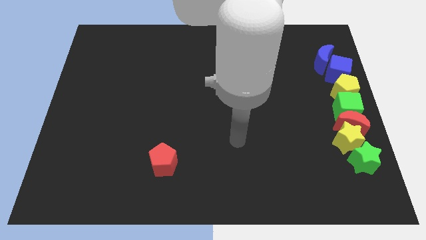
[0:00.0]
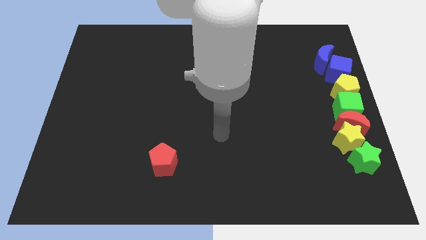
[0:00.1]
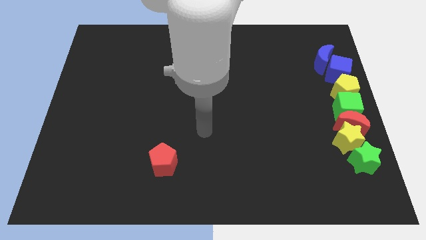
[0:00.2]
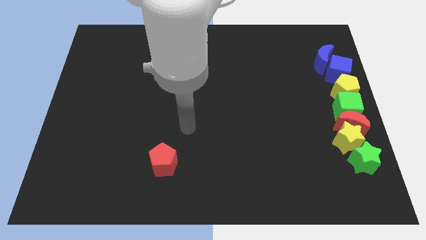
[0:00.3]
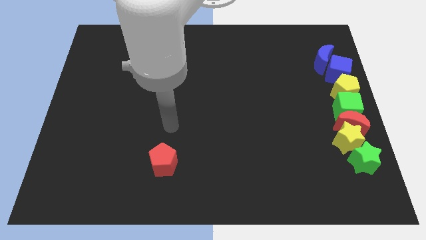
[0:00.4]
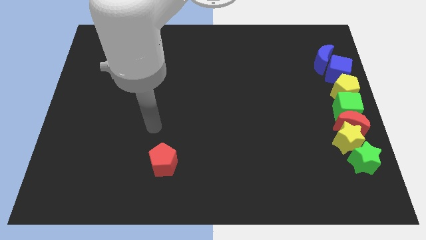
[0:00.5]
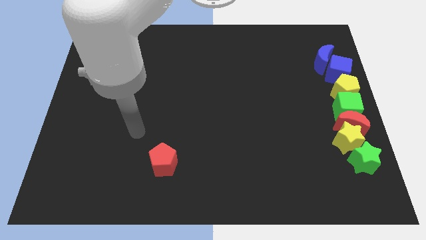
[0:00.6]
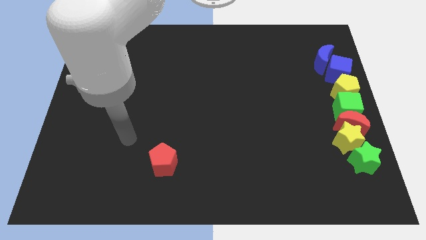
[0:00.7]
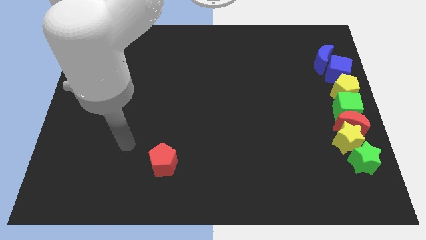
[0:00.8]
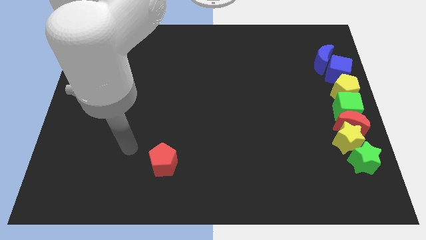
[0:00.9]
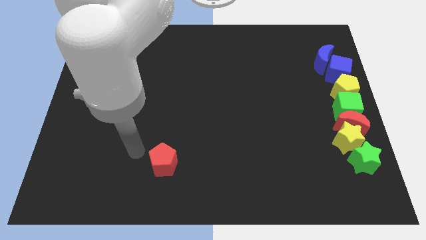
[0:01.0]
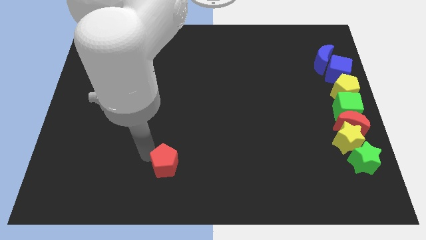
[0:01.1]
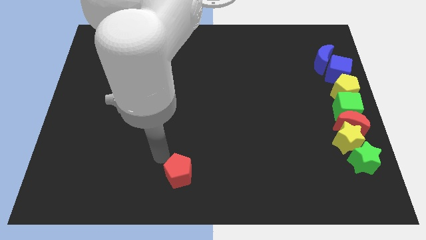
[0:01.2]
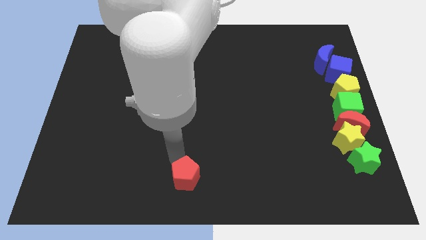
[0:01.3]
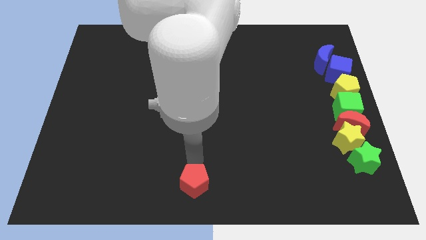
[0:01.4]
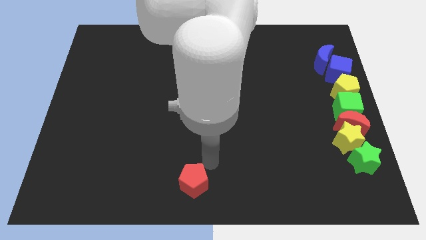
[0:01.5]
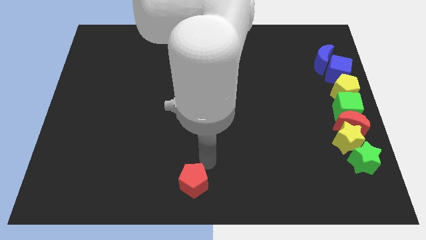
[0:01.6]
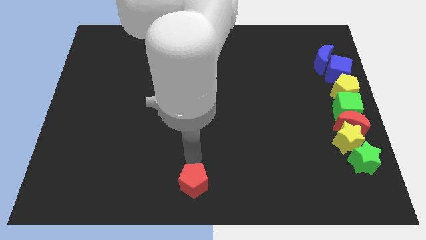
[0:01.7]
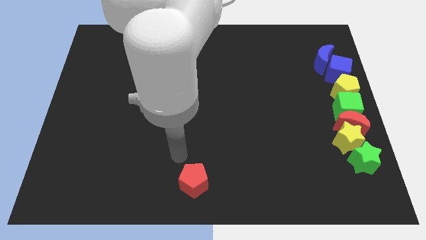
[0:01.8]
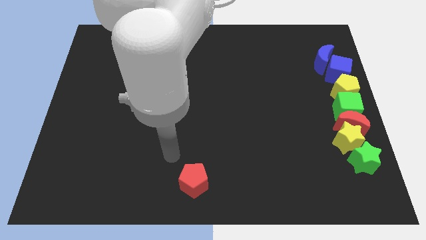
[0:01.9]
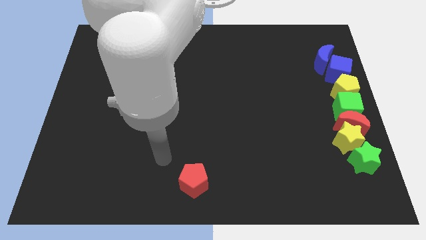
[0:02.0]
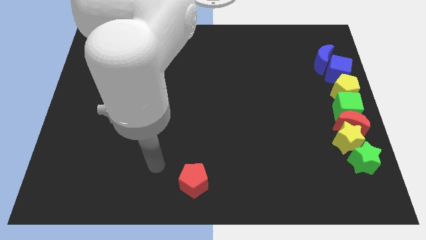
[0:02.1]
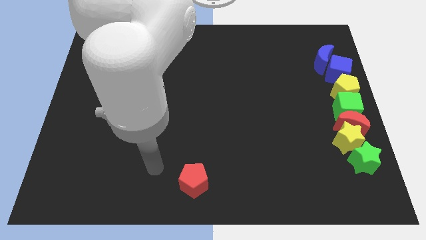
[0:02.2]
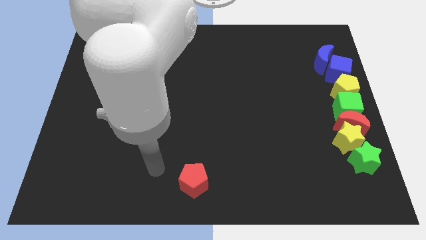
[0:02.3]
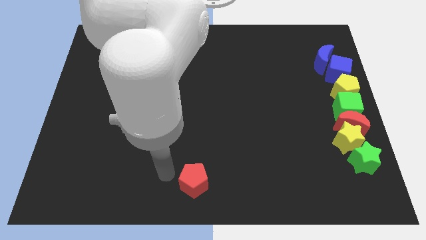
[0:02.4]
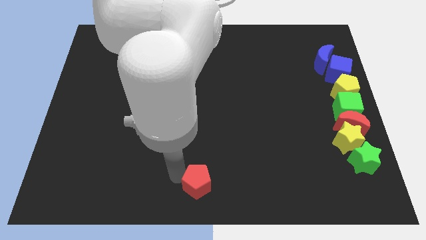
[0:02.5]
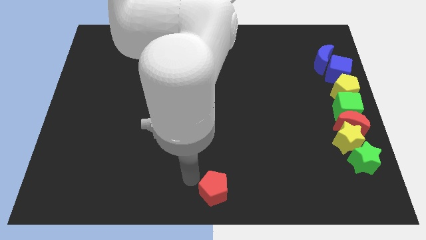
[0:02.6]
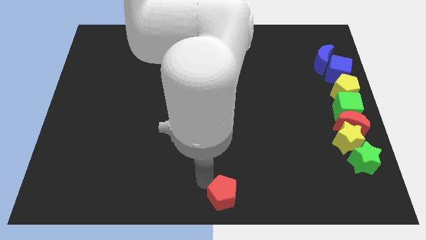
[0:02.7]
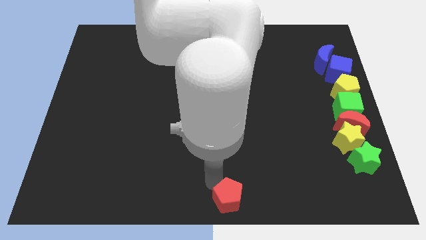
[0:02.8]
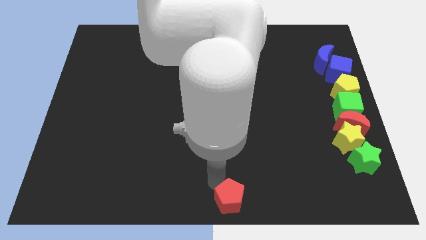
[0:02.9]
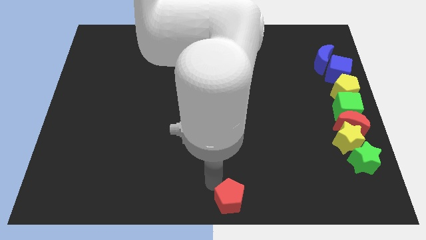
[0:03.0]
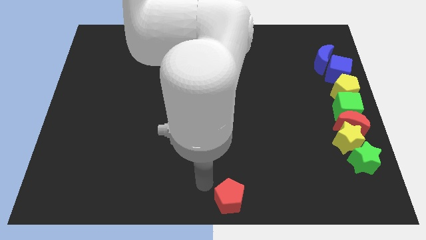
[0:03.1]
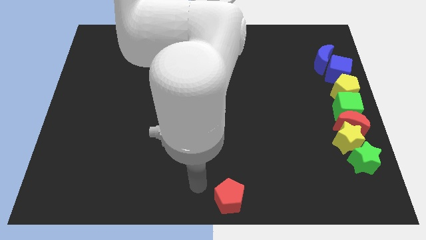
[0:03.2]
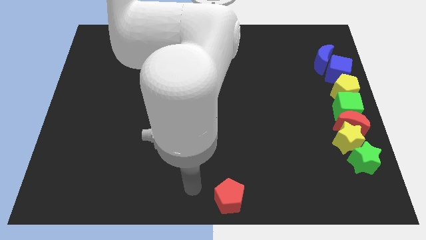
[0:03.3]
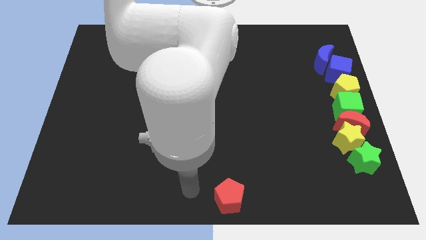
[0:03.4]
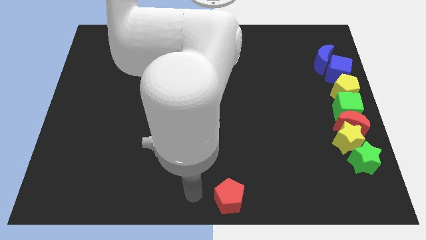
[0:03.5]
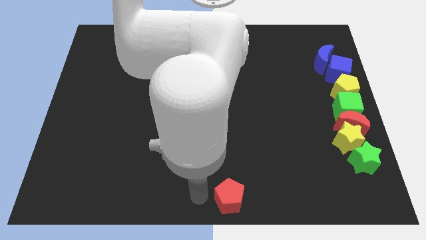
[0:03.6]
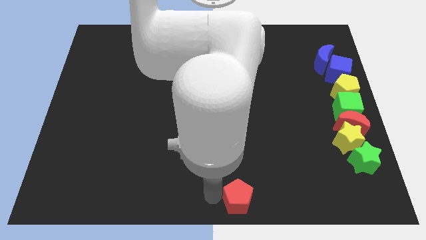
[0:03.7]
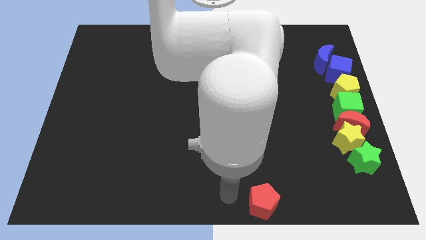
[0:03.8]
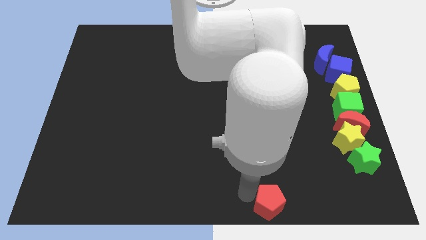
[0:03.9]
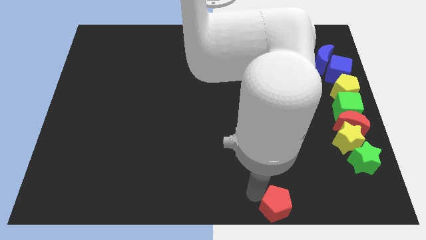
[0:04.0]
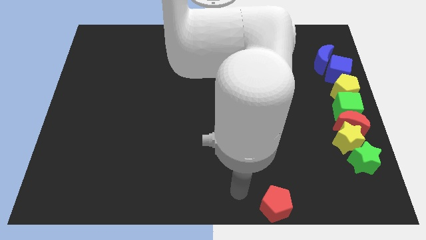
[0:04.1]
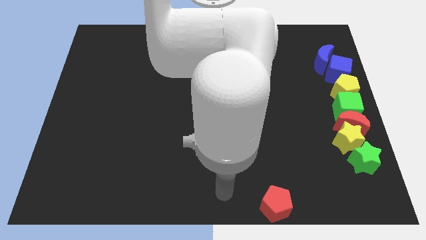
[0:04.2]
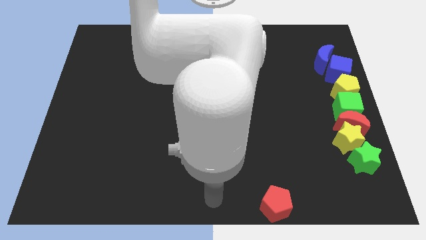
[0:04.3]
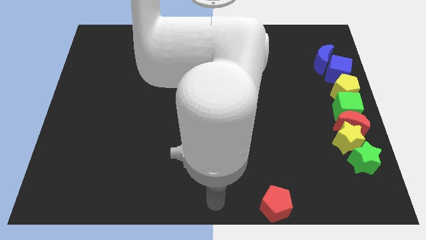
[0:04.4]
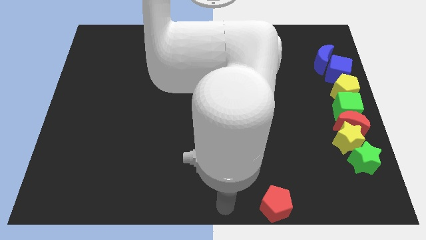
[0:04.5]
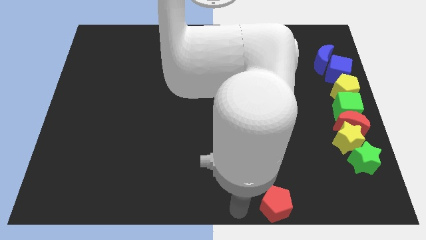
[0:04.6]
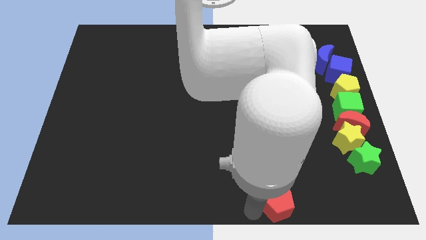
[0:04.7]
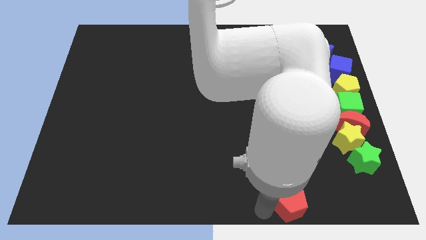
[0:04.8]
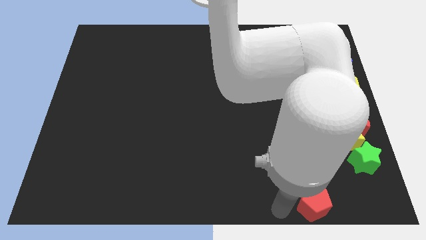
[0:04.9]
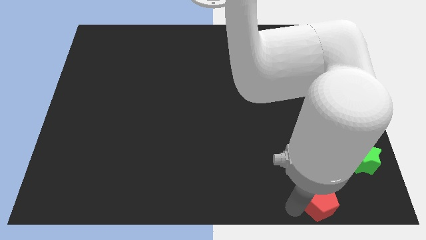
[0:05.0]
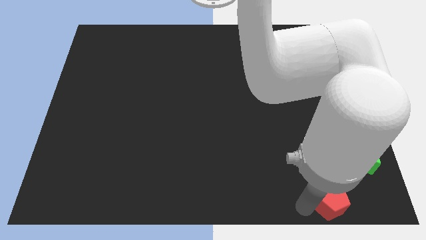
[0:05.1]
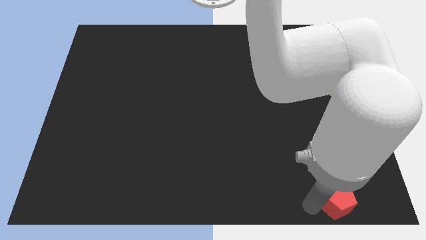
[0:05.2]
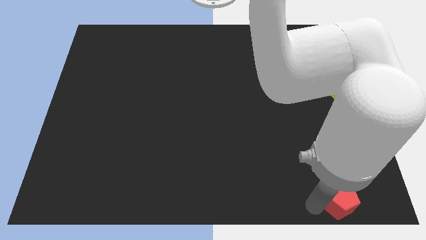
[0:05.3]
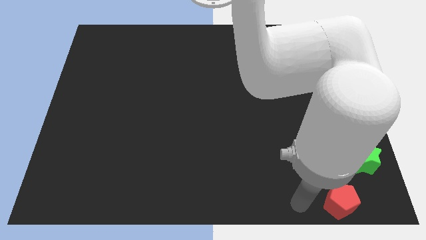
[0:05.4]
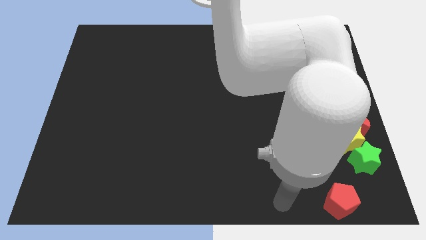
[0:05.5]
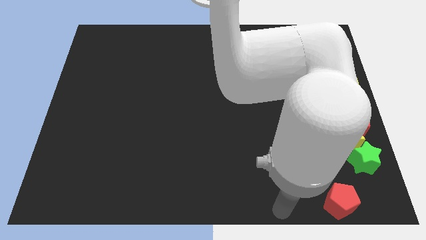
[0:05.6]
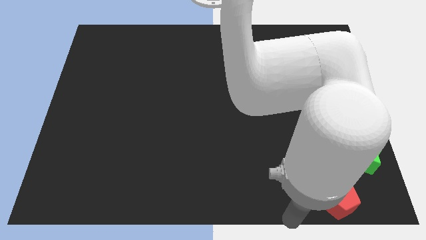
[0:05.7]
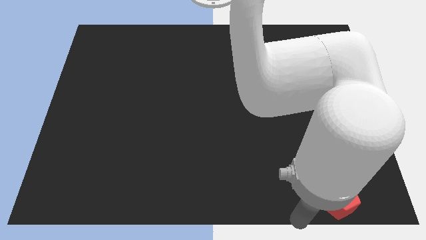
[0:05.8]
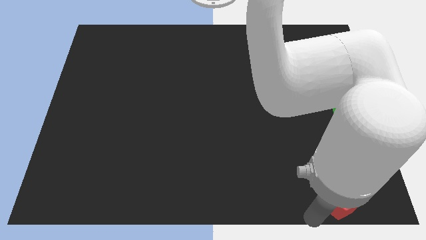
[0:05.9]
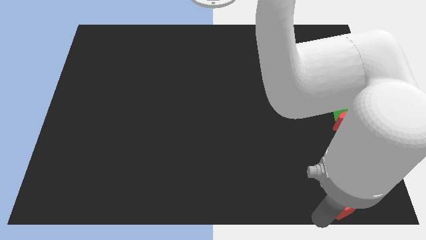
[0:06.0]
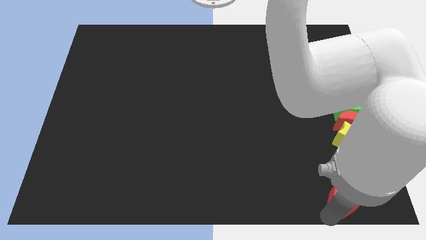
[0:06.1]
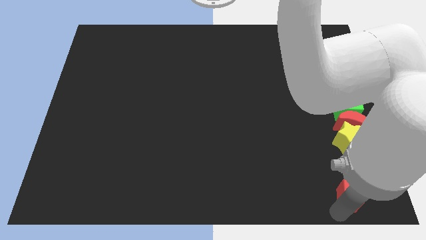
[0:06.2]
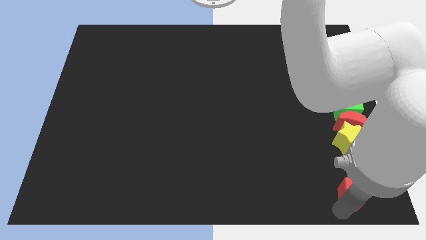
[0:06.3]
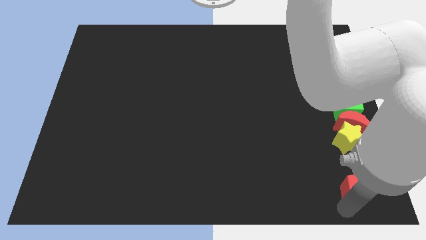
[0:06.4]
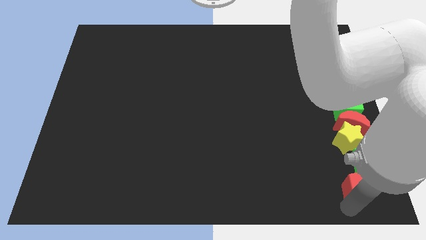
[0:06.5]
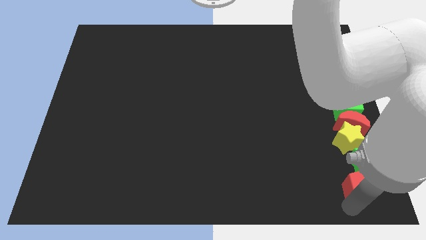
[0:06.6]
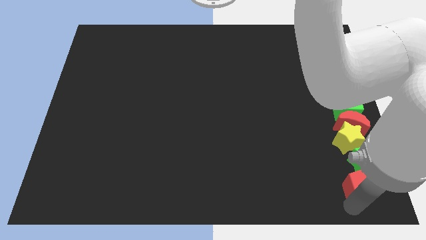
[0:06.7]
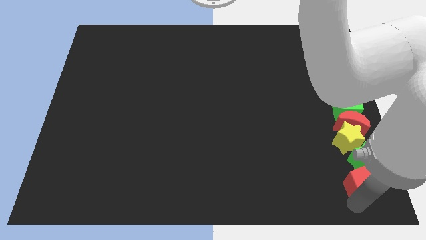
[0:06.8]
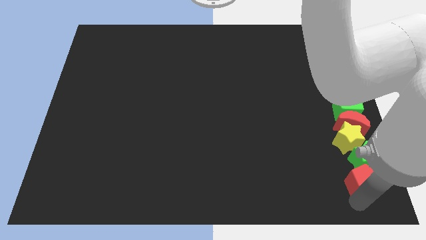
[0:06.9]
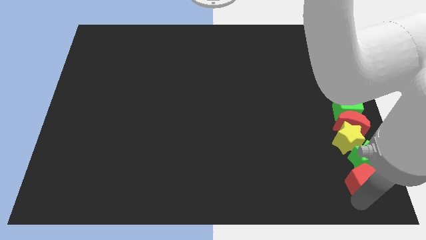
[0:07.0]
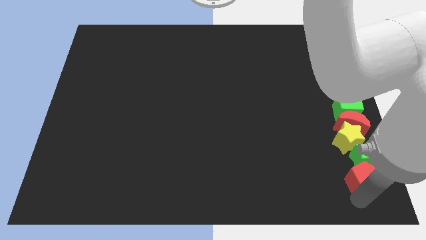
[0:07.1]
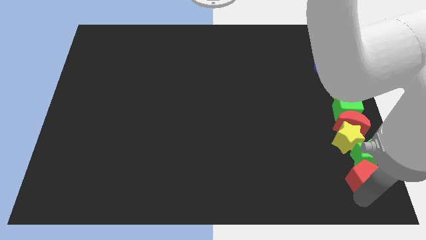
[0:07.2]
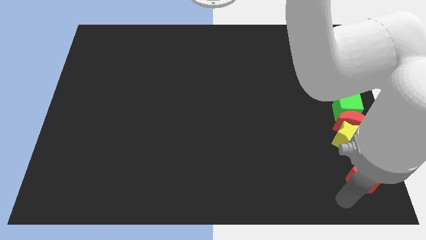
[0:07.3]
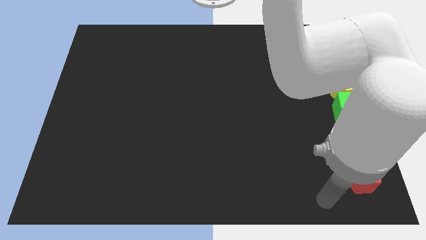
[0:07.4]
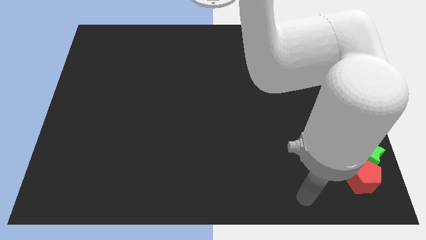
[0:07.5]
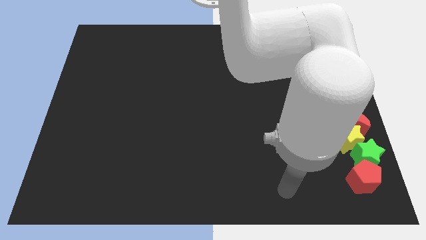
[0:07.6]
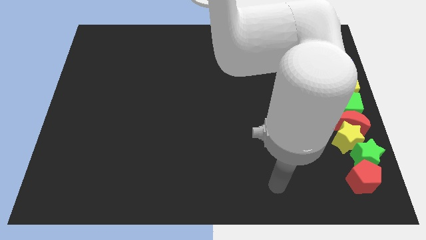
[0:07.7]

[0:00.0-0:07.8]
place the red pentagon near the green star

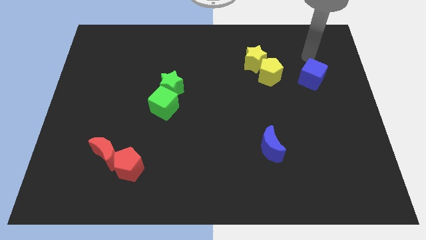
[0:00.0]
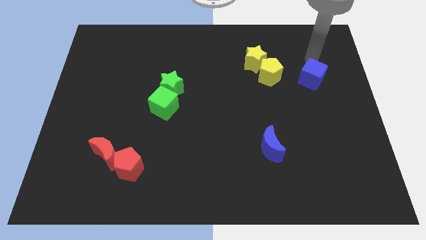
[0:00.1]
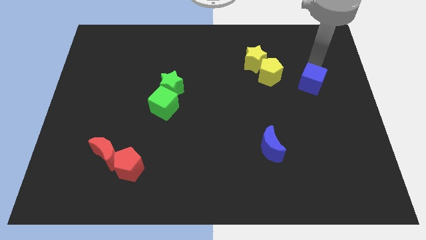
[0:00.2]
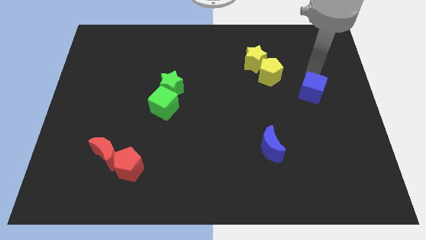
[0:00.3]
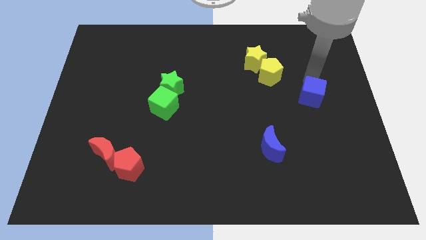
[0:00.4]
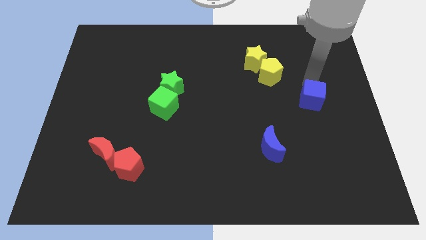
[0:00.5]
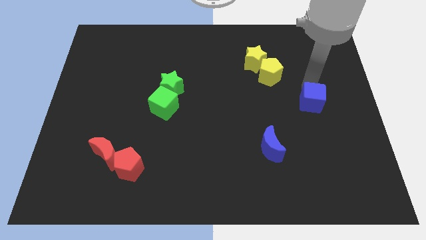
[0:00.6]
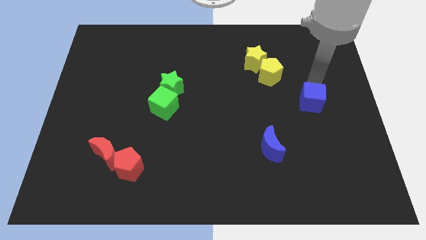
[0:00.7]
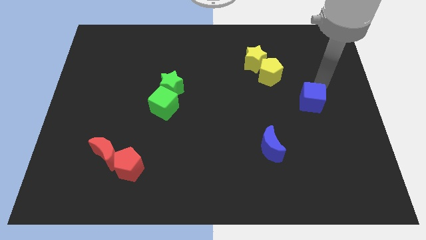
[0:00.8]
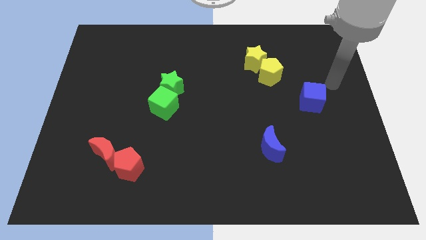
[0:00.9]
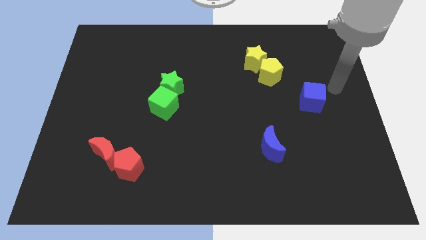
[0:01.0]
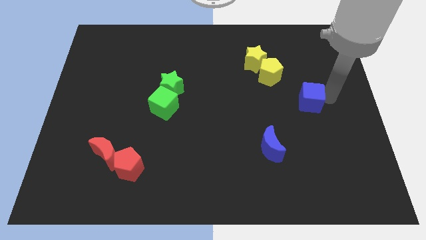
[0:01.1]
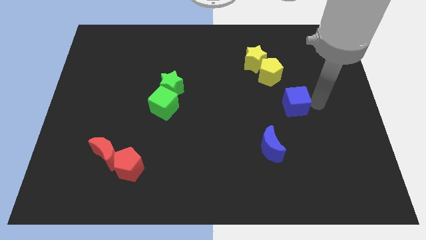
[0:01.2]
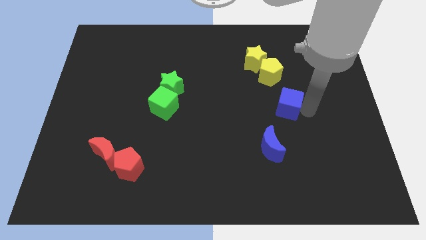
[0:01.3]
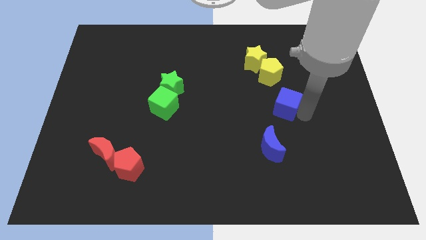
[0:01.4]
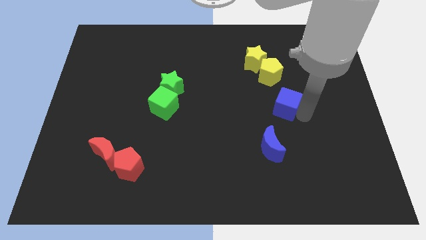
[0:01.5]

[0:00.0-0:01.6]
push the blue cube at the bottom right side of yellow pentagon
